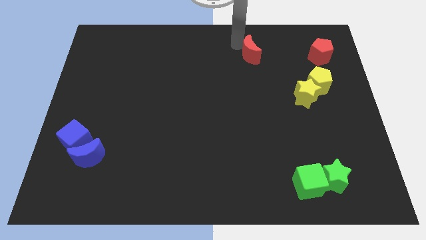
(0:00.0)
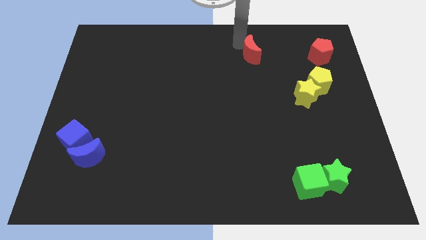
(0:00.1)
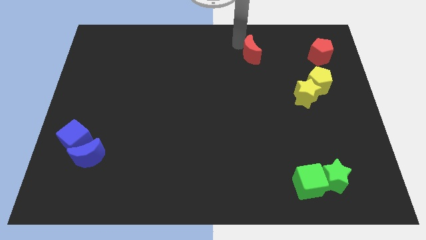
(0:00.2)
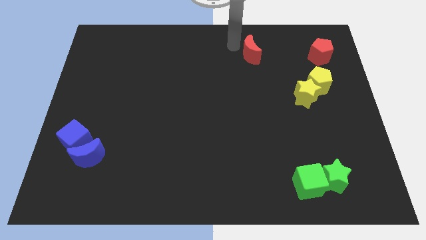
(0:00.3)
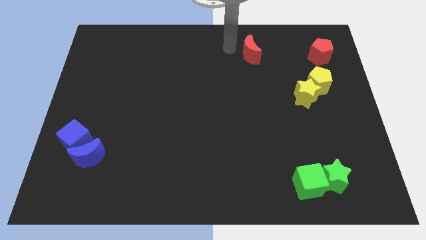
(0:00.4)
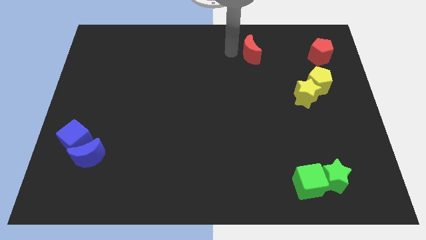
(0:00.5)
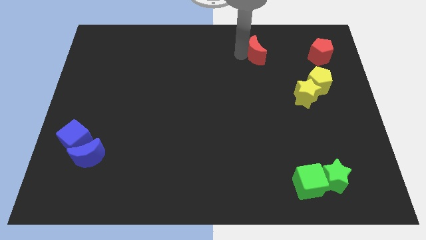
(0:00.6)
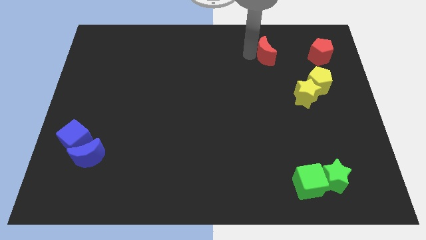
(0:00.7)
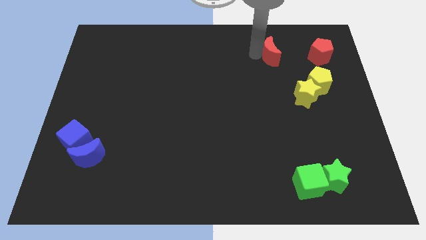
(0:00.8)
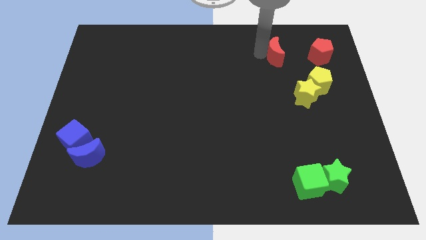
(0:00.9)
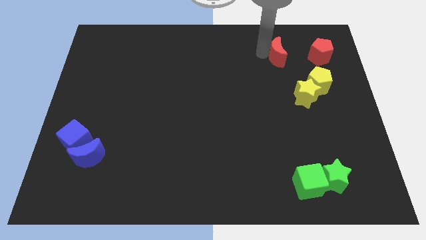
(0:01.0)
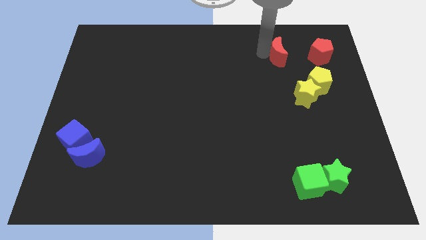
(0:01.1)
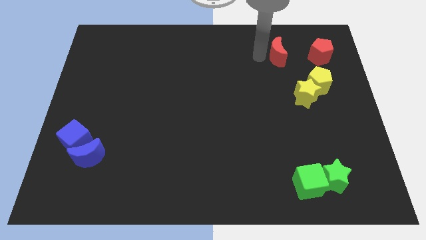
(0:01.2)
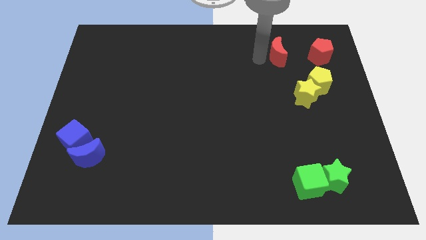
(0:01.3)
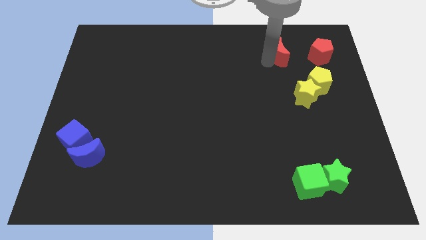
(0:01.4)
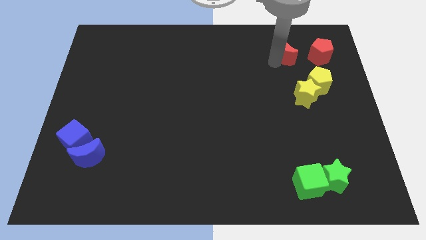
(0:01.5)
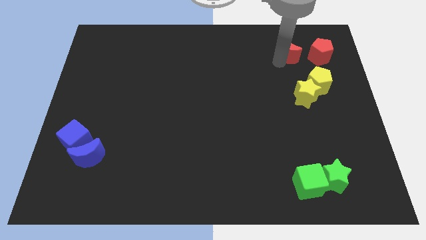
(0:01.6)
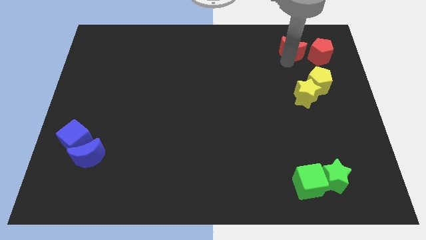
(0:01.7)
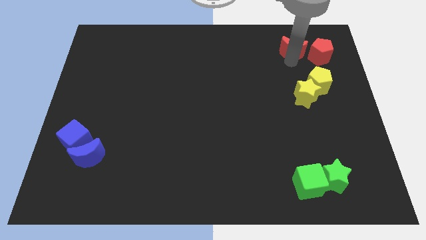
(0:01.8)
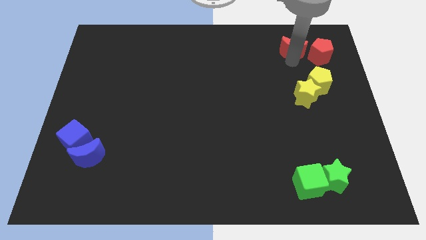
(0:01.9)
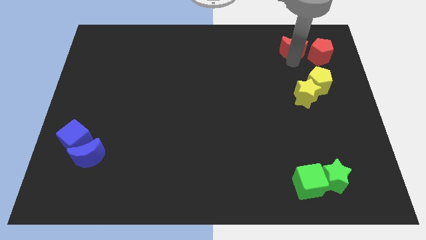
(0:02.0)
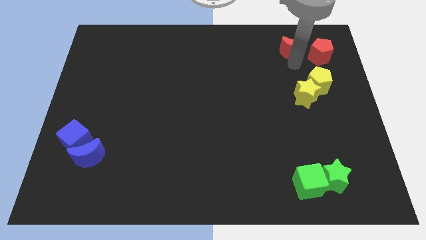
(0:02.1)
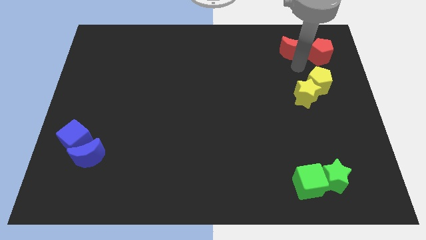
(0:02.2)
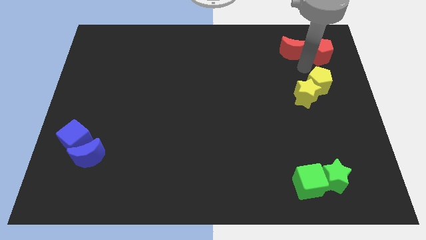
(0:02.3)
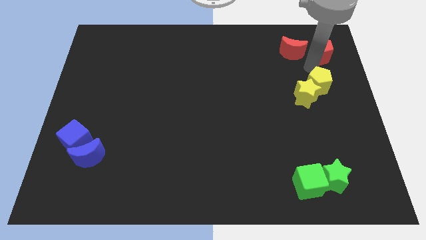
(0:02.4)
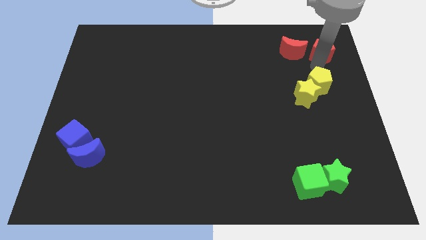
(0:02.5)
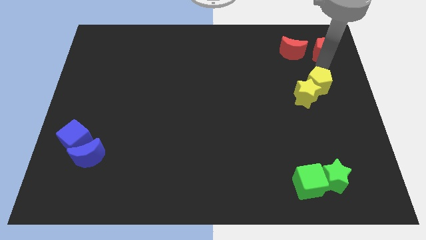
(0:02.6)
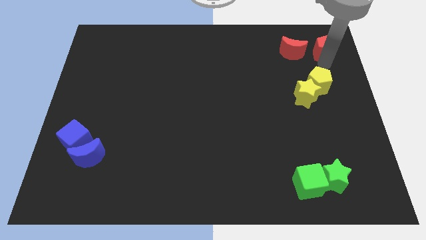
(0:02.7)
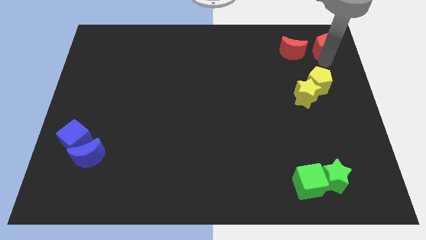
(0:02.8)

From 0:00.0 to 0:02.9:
move the red crescent to the left side of the red pentagon

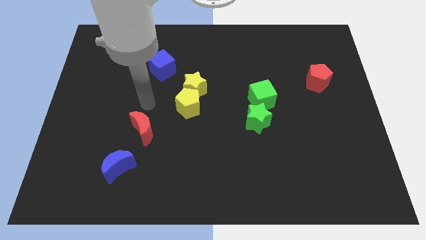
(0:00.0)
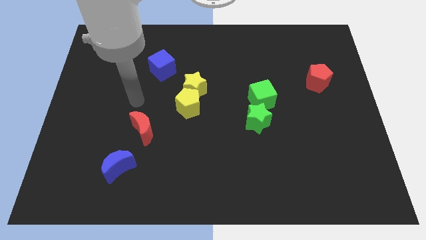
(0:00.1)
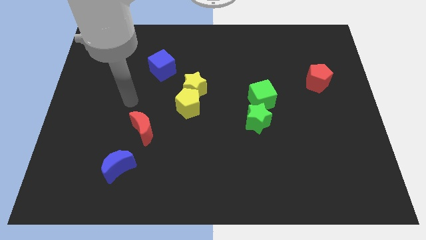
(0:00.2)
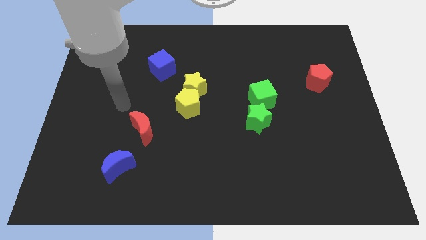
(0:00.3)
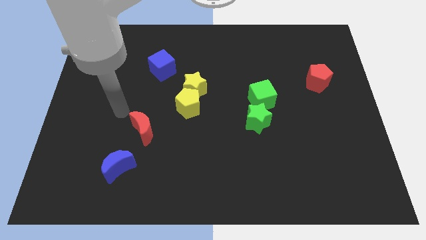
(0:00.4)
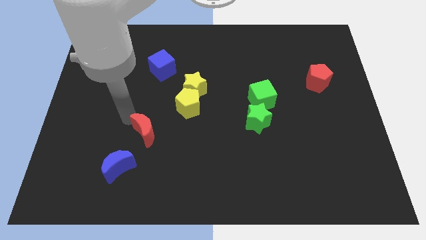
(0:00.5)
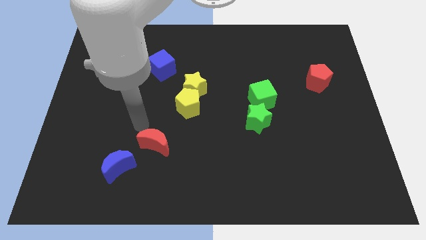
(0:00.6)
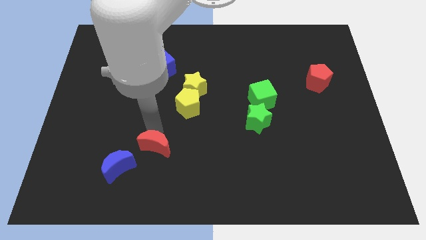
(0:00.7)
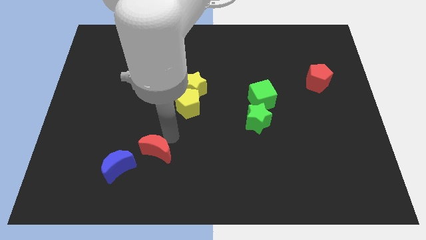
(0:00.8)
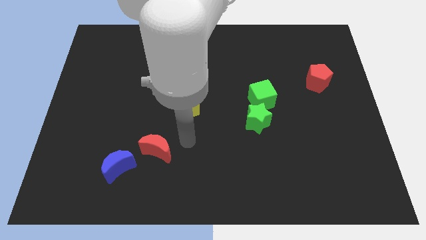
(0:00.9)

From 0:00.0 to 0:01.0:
push the red moon slightly downward

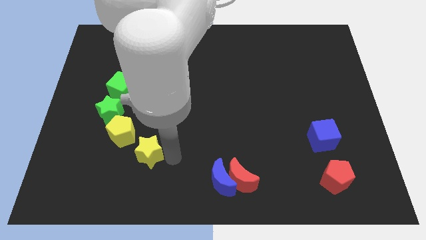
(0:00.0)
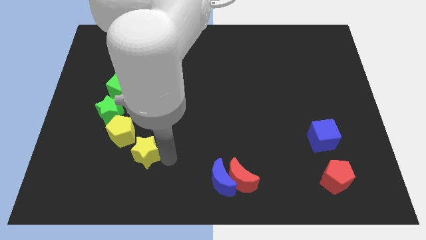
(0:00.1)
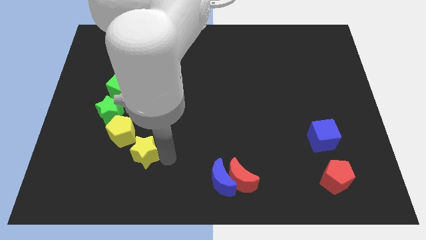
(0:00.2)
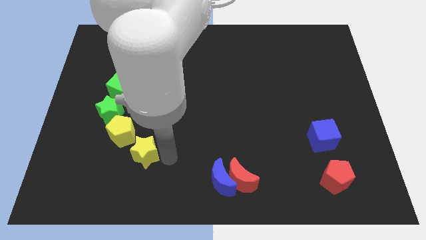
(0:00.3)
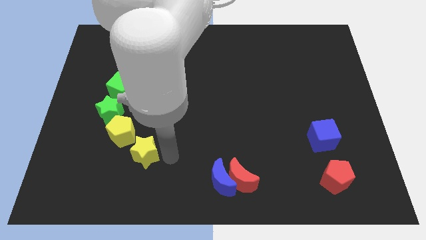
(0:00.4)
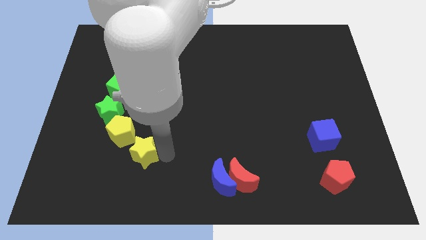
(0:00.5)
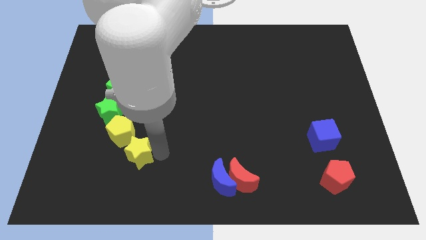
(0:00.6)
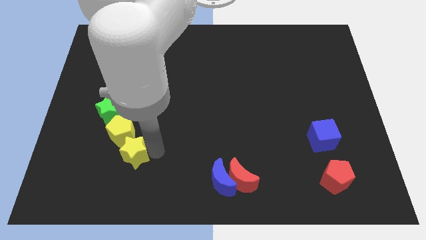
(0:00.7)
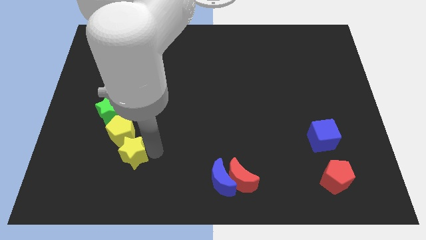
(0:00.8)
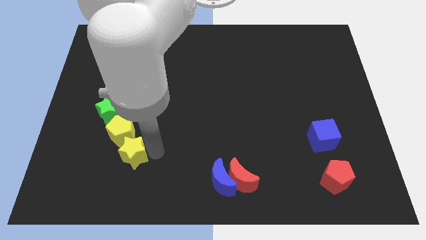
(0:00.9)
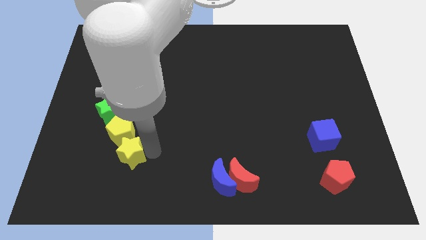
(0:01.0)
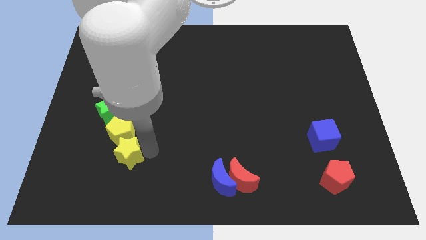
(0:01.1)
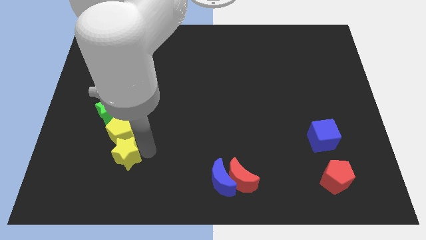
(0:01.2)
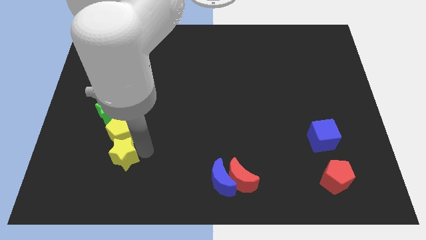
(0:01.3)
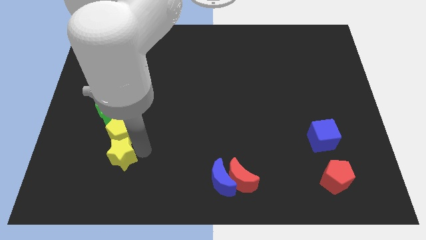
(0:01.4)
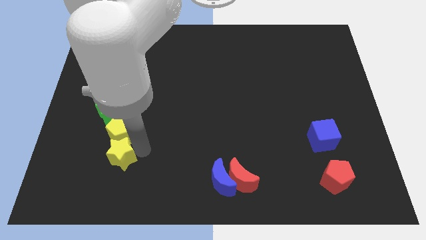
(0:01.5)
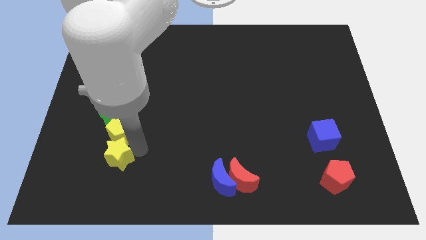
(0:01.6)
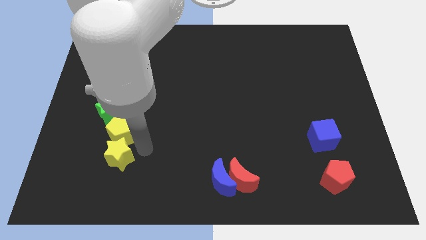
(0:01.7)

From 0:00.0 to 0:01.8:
push the yellow star to the bottom of the yellow pentagon

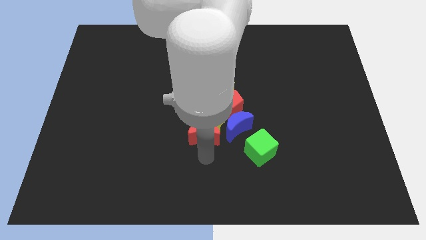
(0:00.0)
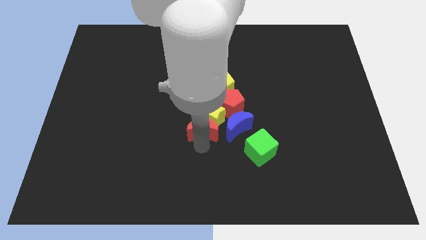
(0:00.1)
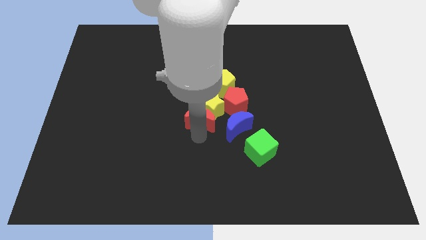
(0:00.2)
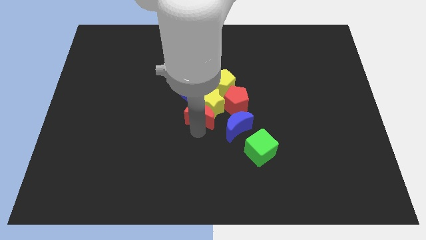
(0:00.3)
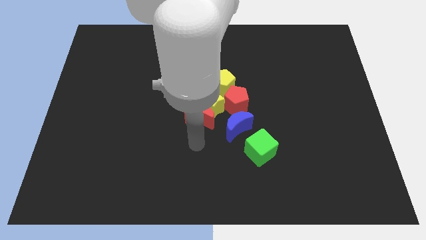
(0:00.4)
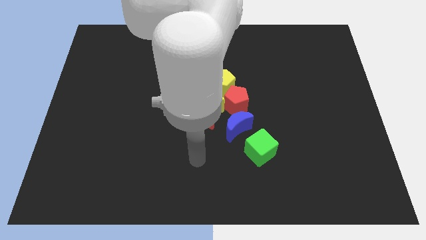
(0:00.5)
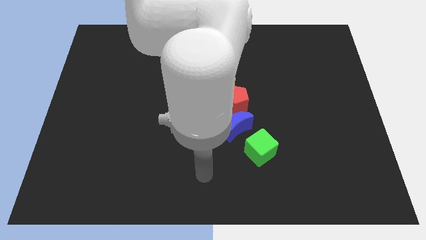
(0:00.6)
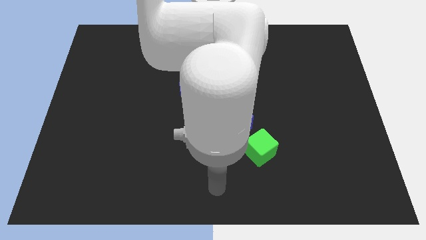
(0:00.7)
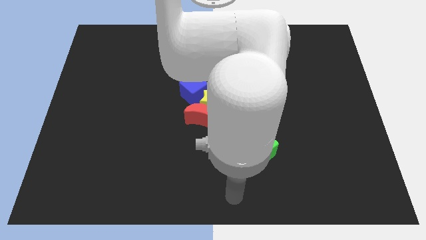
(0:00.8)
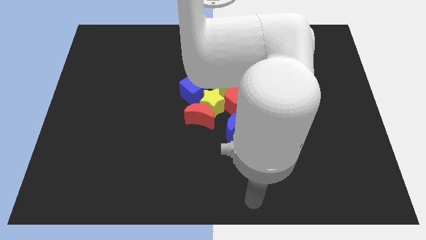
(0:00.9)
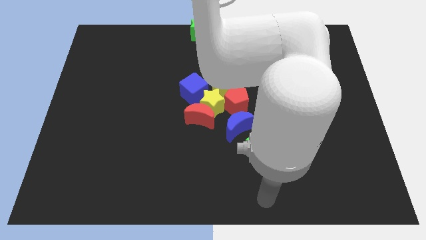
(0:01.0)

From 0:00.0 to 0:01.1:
push the red crescent to the group of blocks

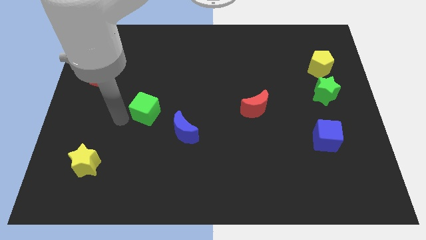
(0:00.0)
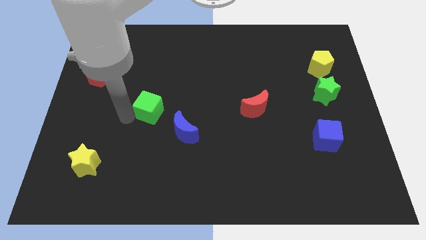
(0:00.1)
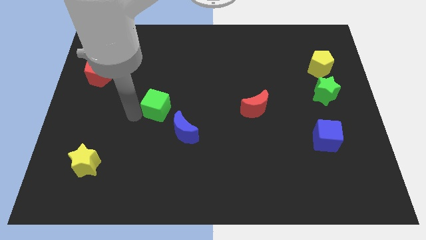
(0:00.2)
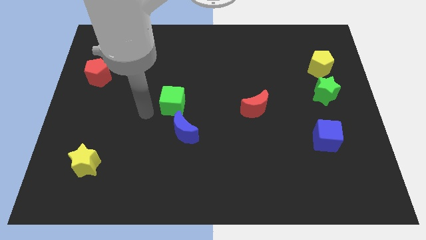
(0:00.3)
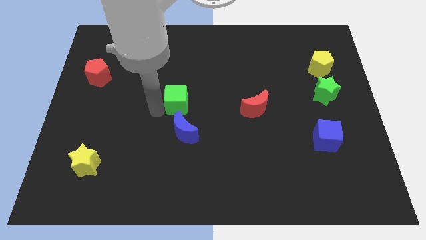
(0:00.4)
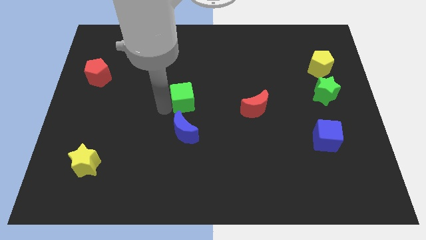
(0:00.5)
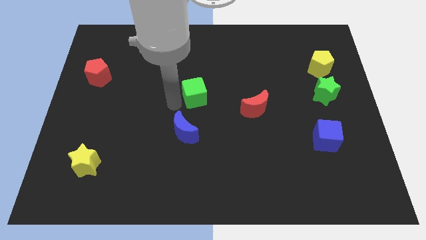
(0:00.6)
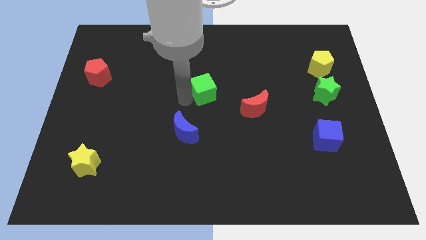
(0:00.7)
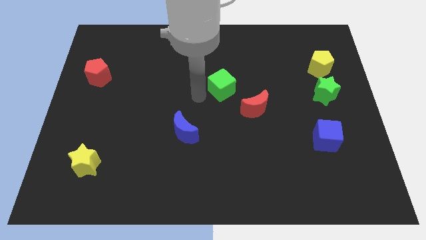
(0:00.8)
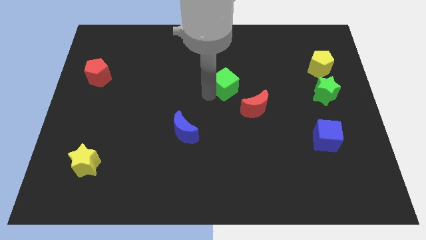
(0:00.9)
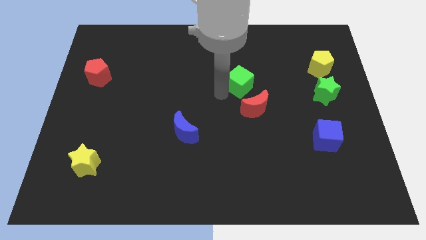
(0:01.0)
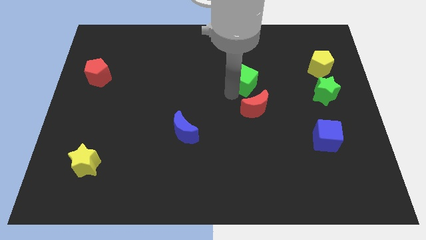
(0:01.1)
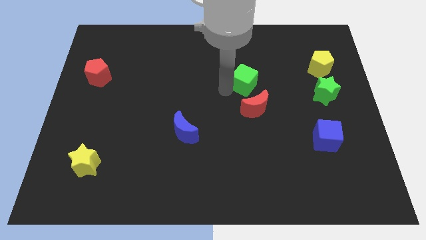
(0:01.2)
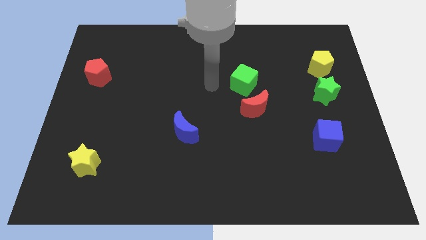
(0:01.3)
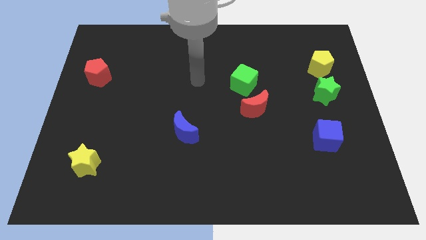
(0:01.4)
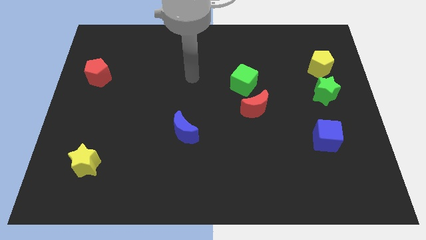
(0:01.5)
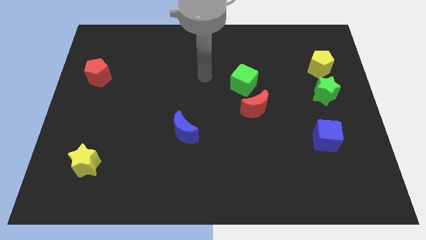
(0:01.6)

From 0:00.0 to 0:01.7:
push the green cube to the top side of the red crescent

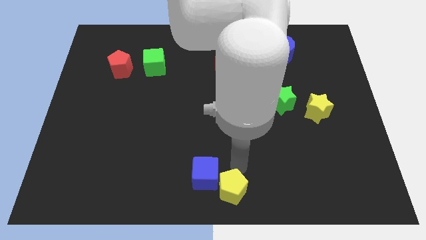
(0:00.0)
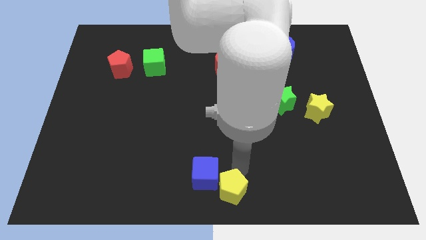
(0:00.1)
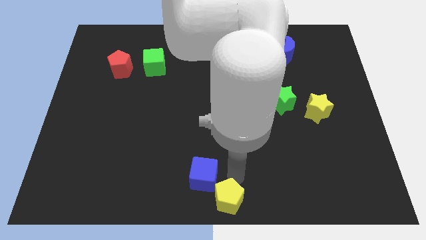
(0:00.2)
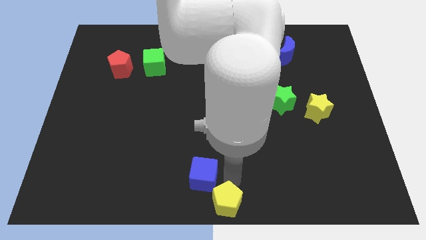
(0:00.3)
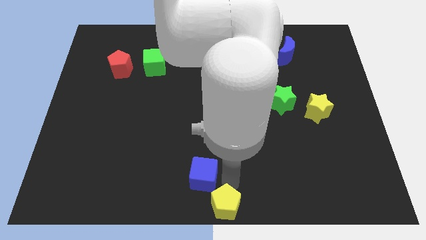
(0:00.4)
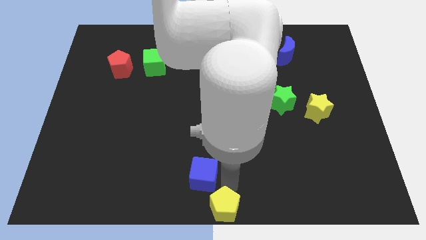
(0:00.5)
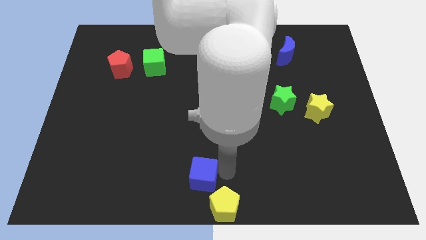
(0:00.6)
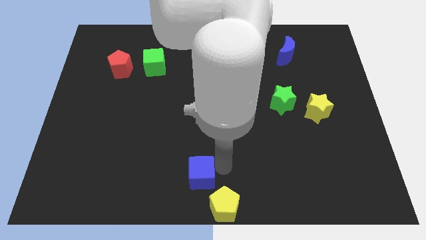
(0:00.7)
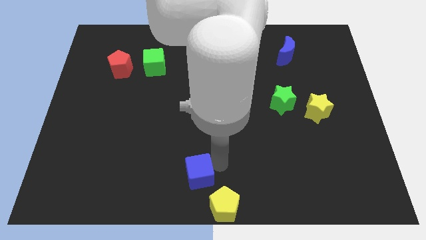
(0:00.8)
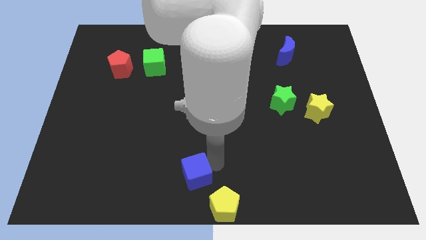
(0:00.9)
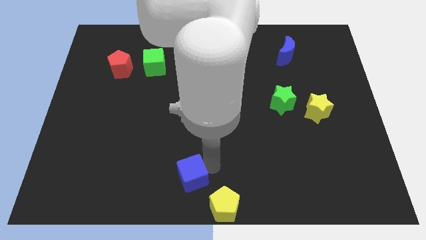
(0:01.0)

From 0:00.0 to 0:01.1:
separate blue cube and yellow pentagon
